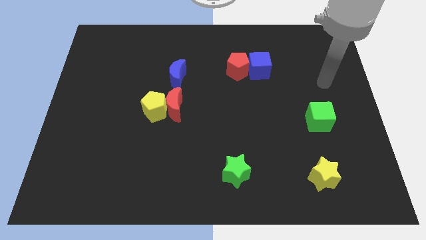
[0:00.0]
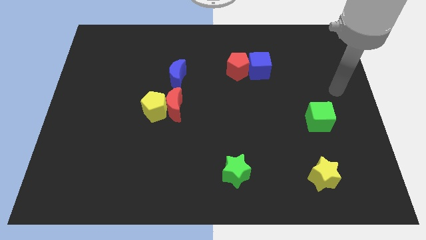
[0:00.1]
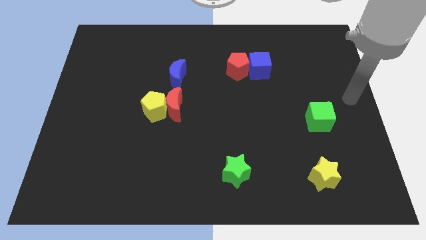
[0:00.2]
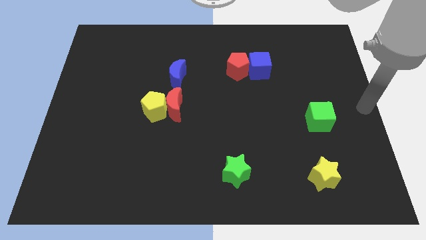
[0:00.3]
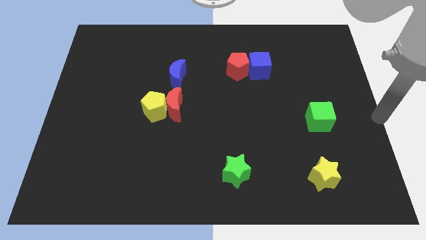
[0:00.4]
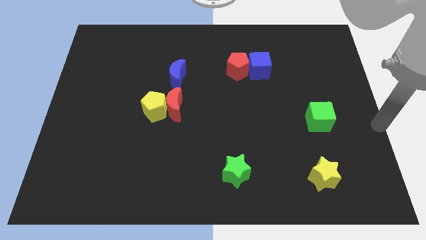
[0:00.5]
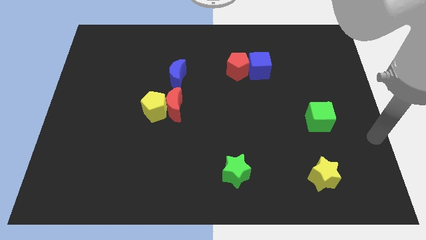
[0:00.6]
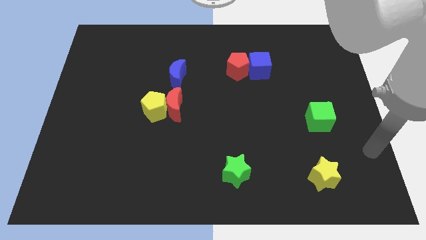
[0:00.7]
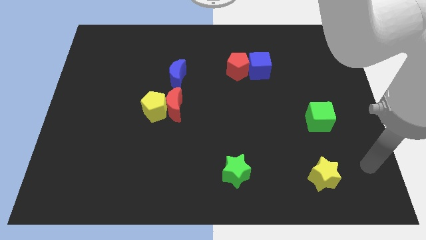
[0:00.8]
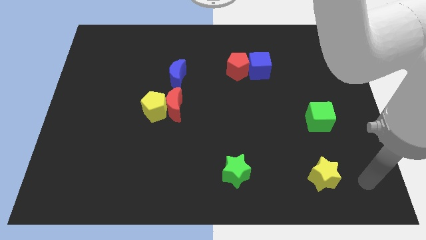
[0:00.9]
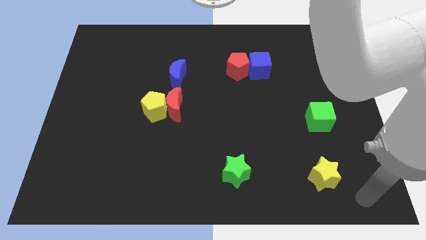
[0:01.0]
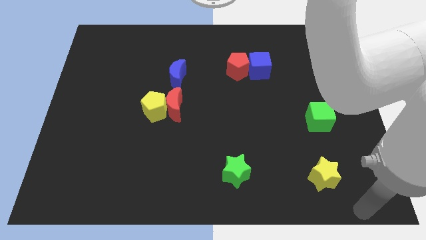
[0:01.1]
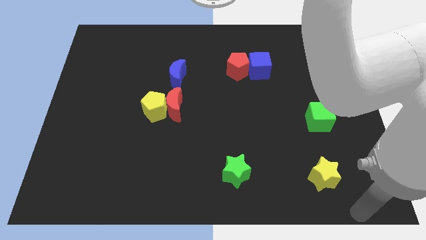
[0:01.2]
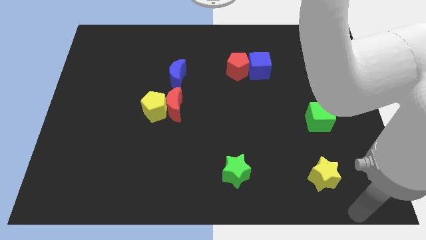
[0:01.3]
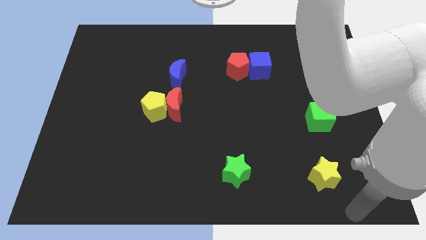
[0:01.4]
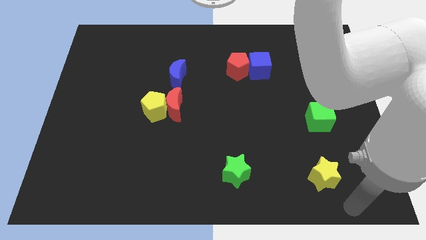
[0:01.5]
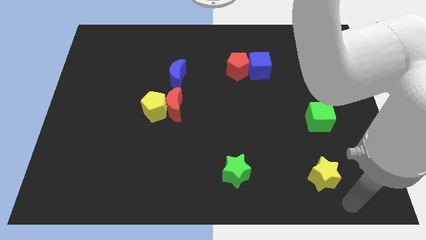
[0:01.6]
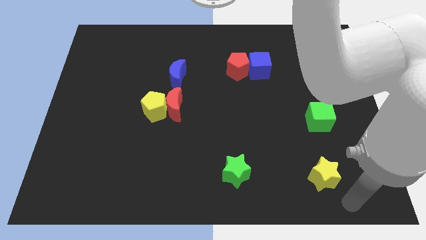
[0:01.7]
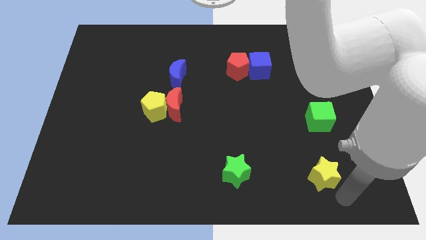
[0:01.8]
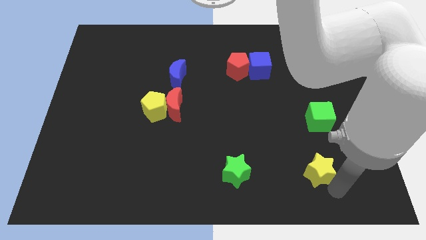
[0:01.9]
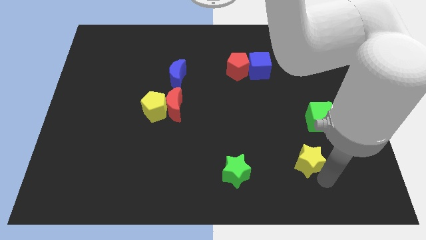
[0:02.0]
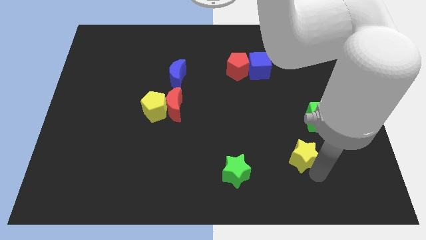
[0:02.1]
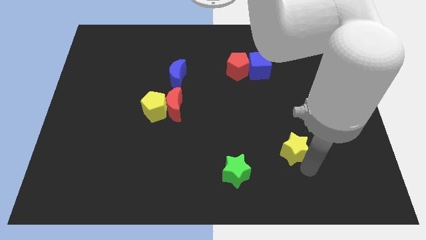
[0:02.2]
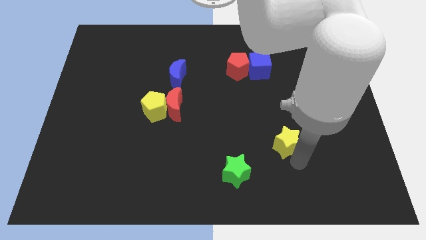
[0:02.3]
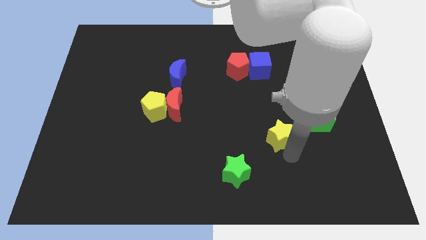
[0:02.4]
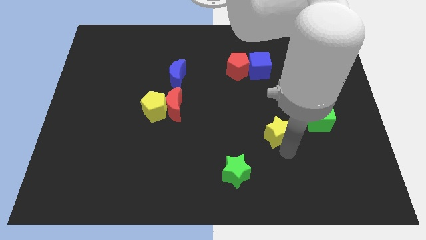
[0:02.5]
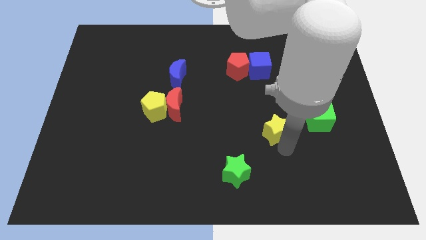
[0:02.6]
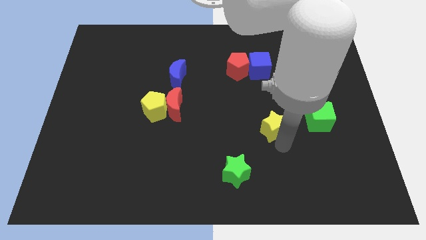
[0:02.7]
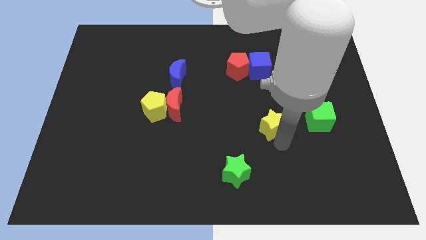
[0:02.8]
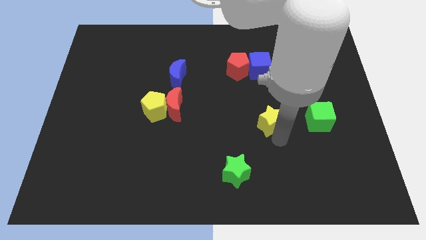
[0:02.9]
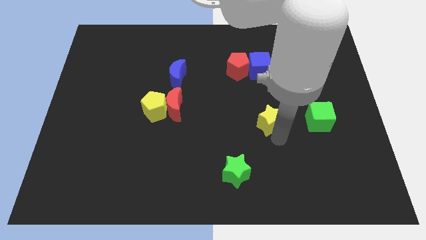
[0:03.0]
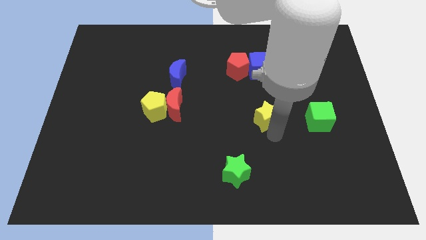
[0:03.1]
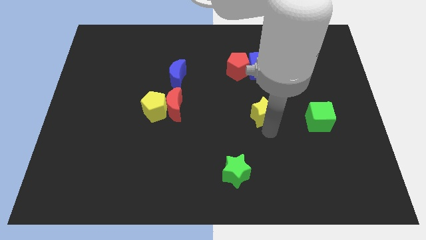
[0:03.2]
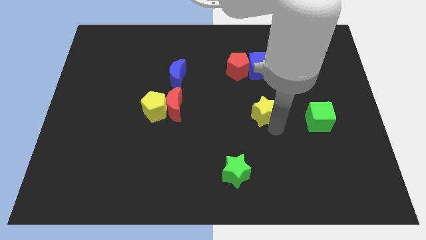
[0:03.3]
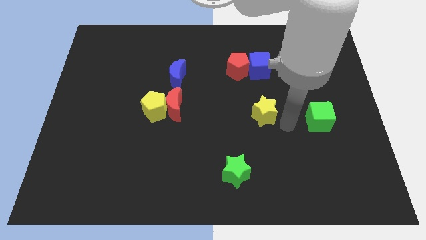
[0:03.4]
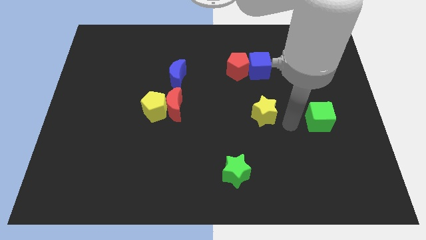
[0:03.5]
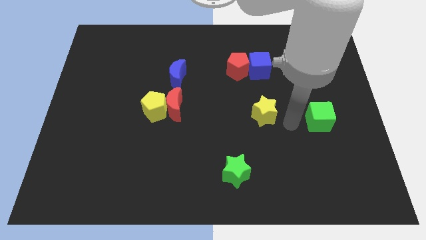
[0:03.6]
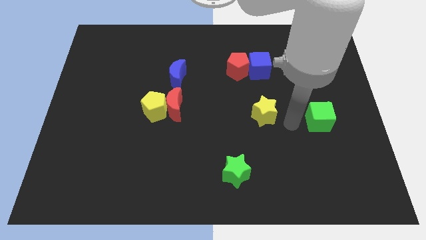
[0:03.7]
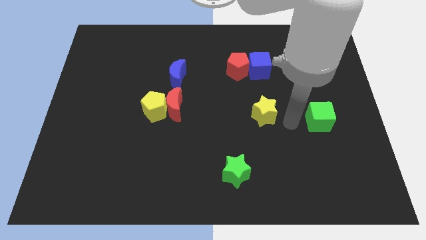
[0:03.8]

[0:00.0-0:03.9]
place yellow star parallel to green cube

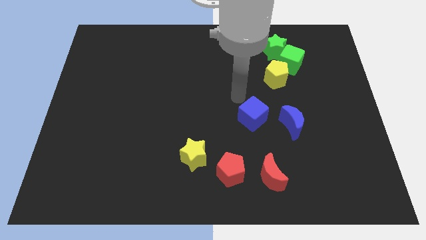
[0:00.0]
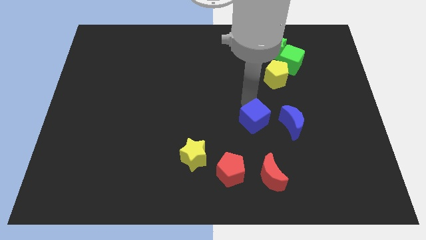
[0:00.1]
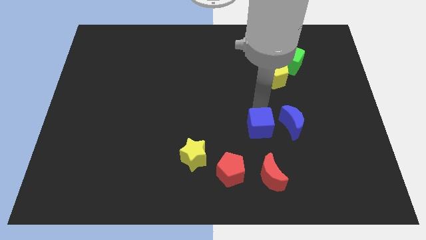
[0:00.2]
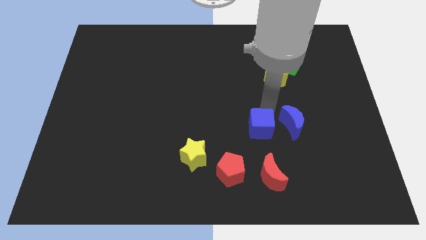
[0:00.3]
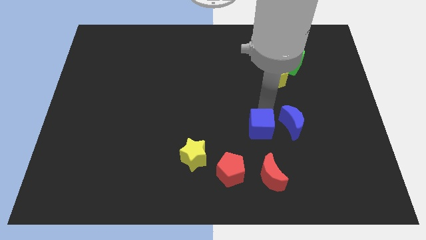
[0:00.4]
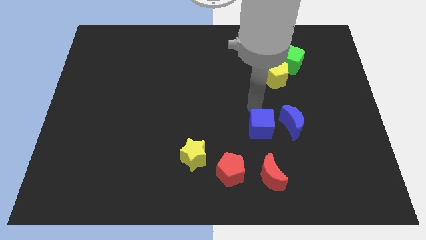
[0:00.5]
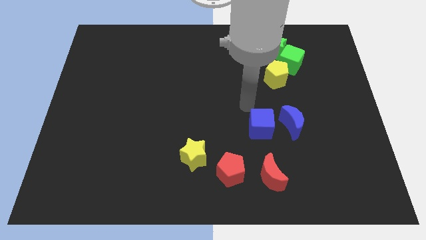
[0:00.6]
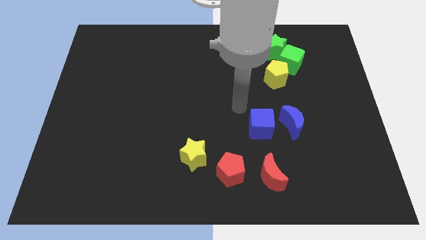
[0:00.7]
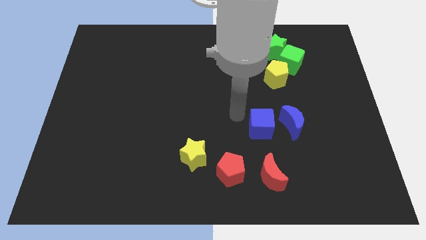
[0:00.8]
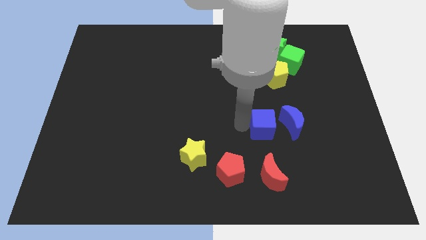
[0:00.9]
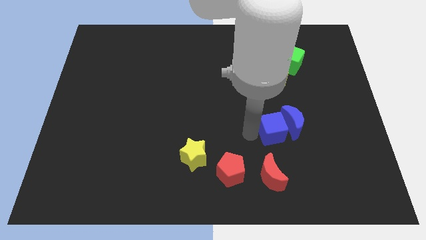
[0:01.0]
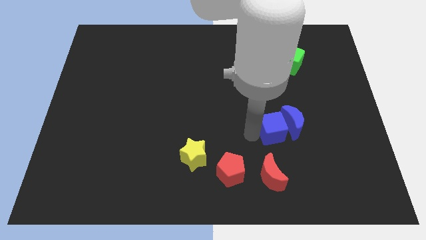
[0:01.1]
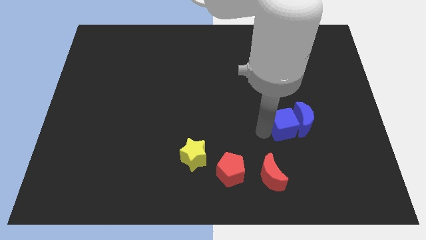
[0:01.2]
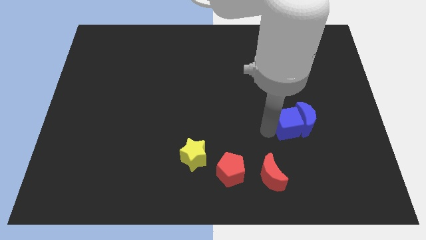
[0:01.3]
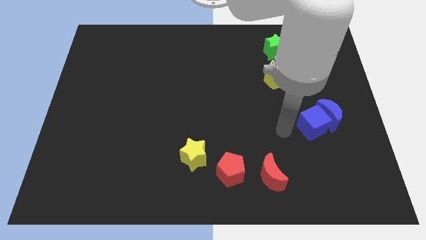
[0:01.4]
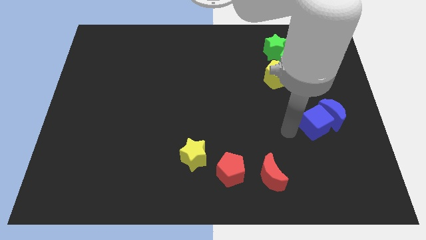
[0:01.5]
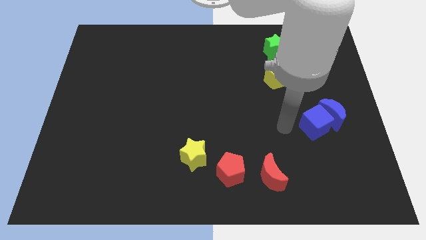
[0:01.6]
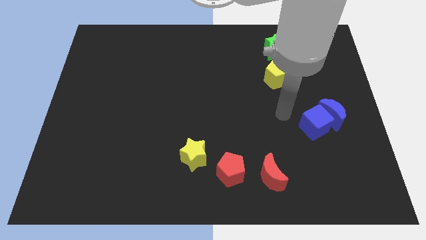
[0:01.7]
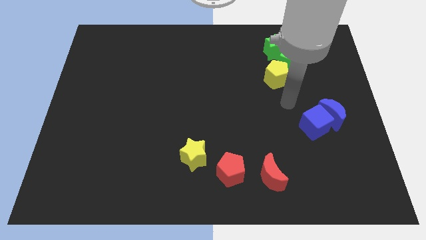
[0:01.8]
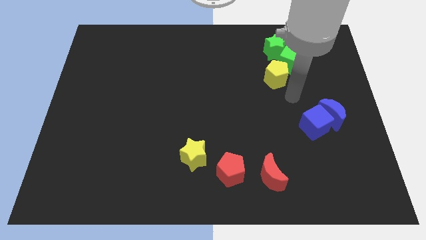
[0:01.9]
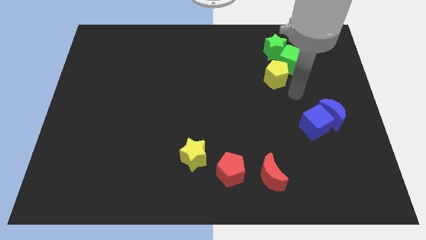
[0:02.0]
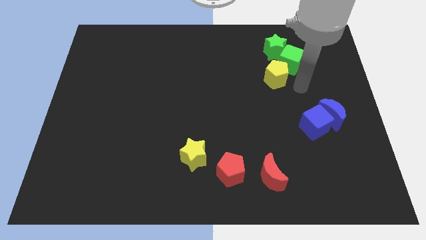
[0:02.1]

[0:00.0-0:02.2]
push blue cube into blue moon

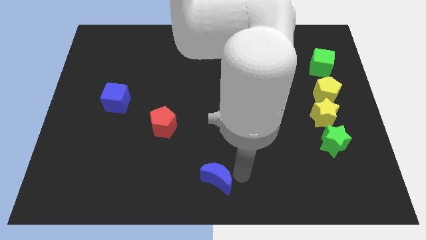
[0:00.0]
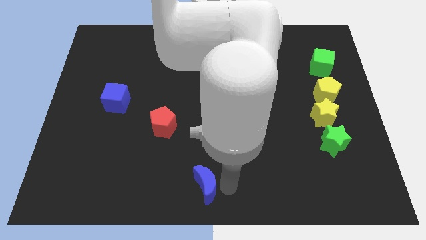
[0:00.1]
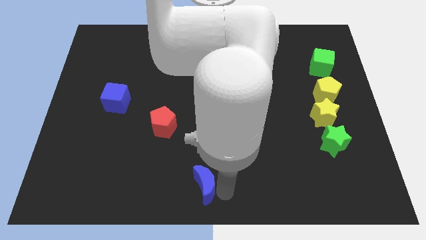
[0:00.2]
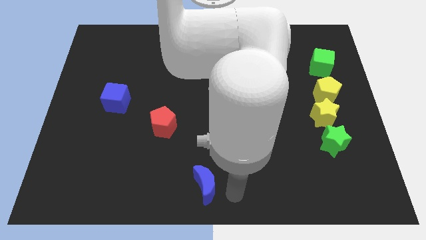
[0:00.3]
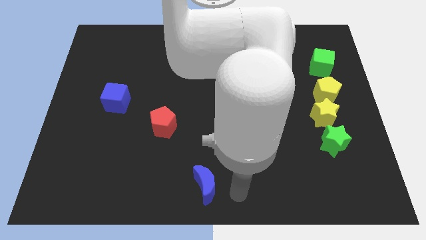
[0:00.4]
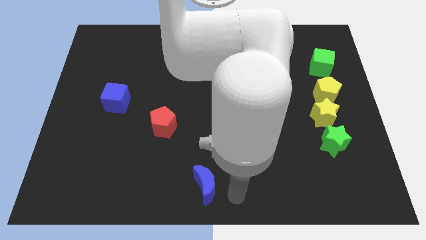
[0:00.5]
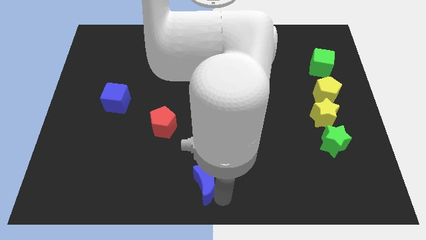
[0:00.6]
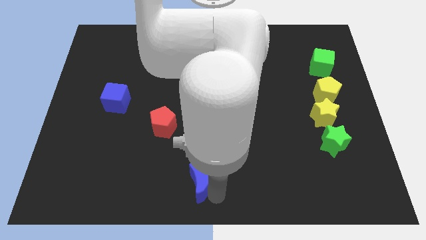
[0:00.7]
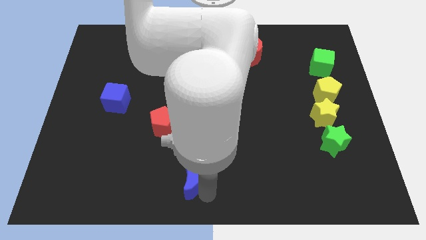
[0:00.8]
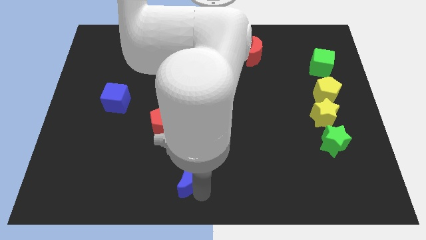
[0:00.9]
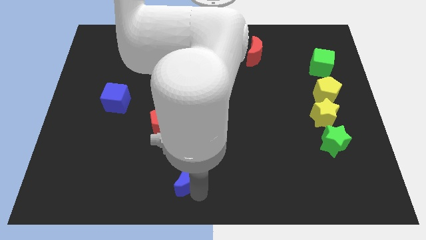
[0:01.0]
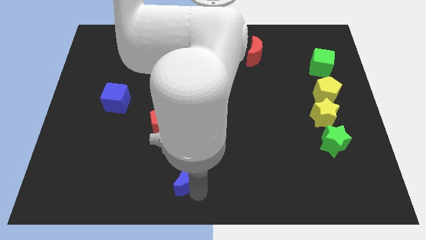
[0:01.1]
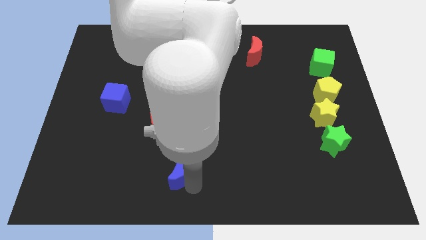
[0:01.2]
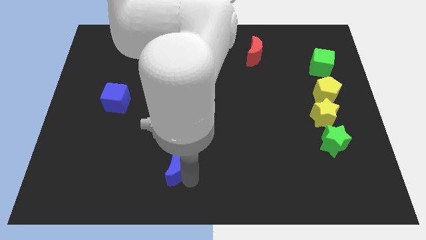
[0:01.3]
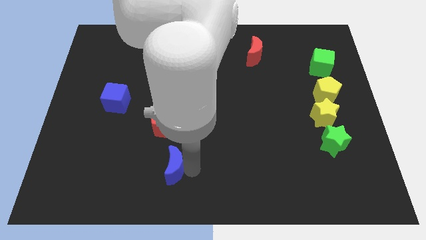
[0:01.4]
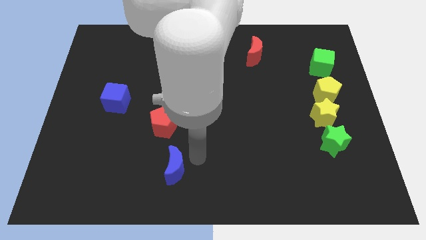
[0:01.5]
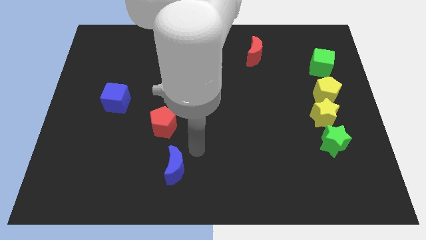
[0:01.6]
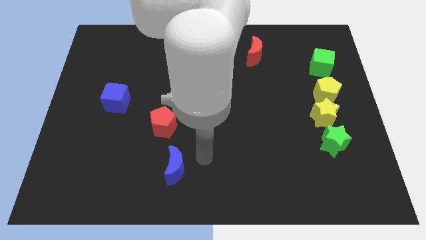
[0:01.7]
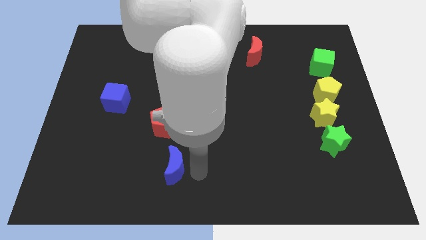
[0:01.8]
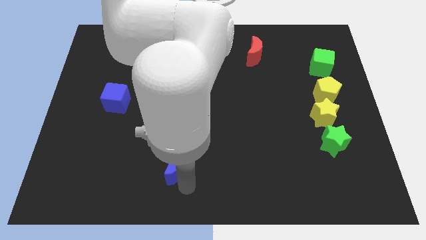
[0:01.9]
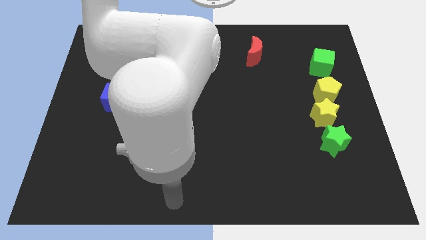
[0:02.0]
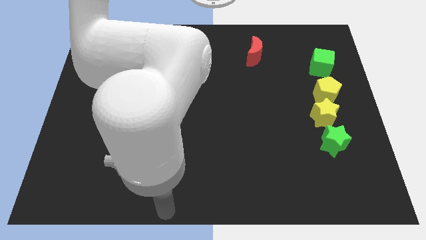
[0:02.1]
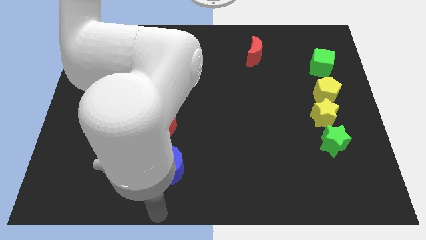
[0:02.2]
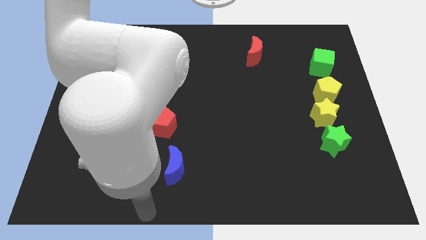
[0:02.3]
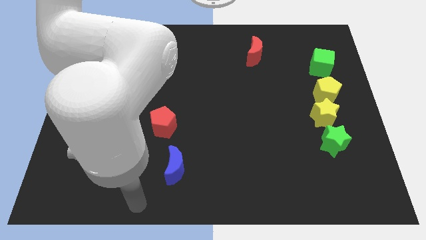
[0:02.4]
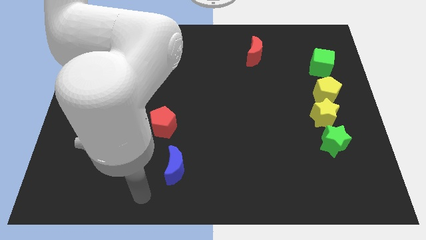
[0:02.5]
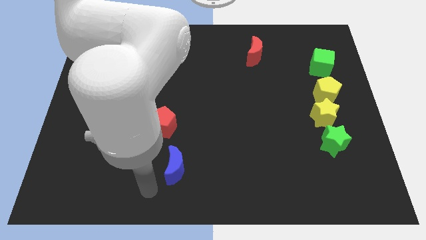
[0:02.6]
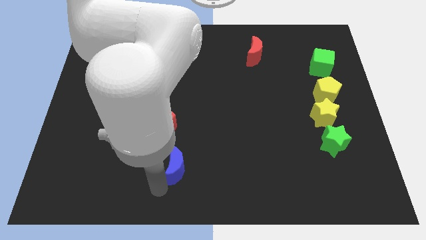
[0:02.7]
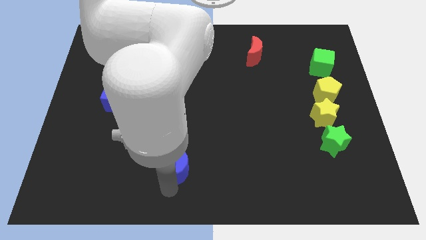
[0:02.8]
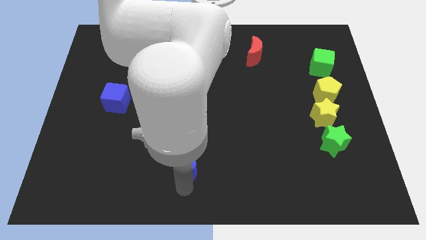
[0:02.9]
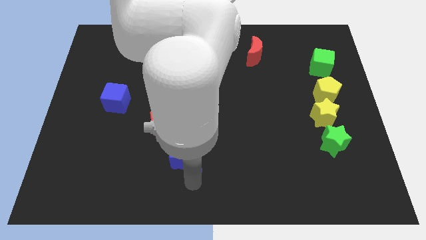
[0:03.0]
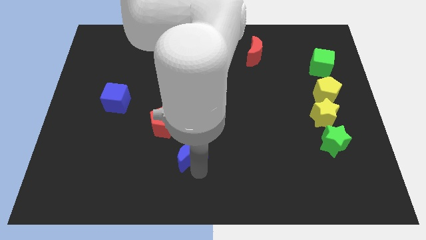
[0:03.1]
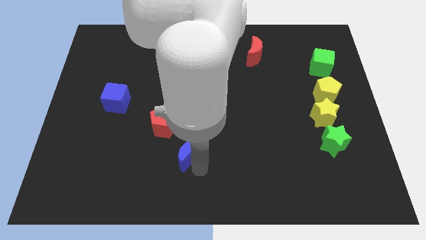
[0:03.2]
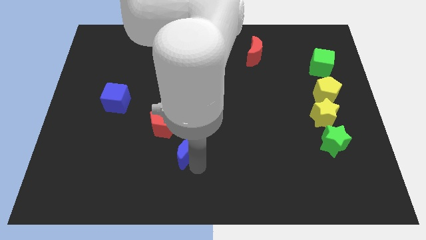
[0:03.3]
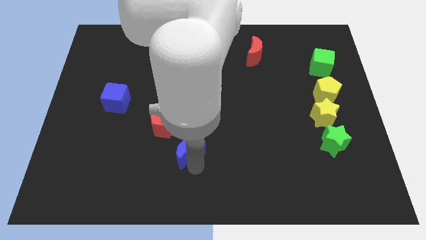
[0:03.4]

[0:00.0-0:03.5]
move the blue crescent towards the red pentagon
